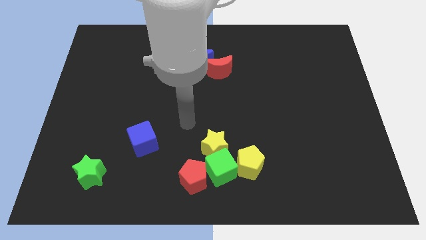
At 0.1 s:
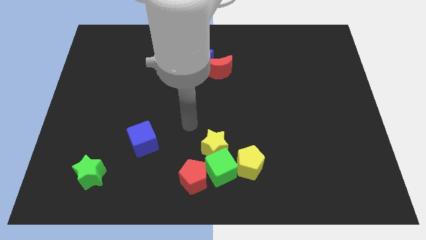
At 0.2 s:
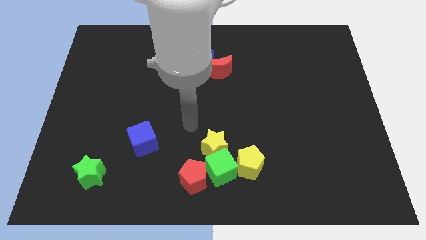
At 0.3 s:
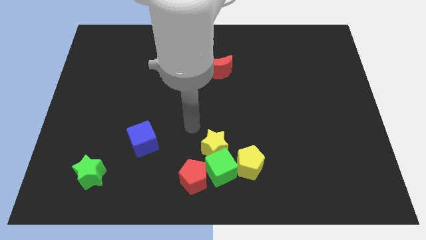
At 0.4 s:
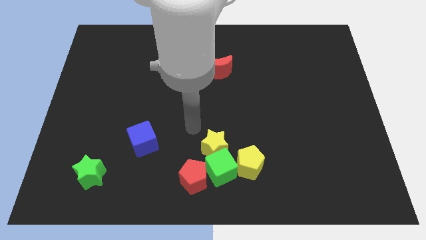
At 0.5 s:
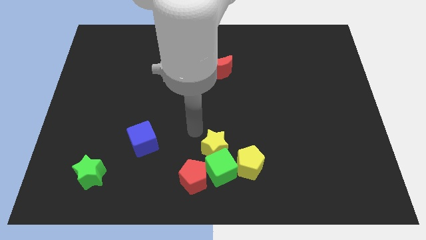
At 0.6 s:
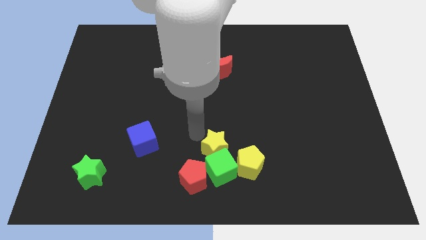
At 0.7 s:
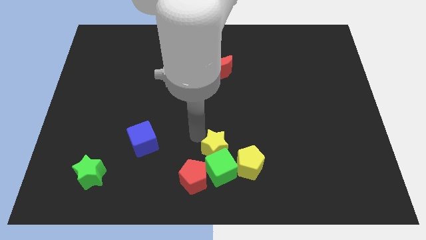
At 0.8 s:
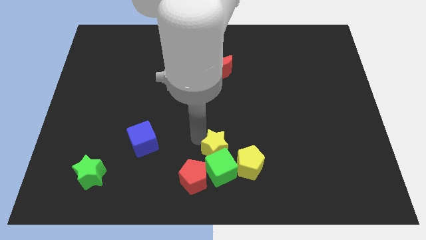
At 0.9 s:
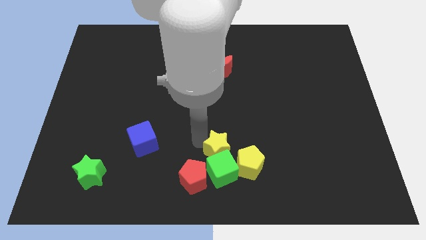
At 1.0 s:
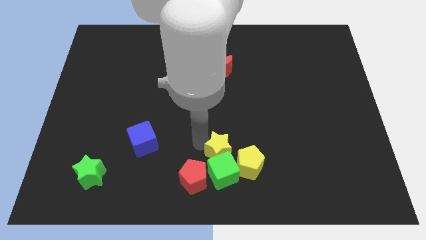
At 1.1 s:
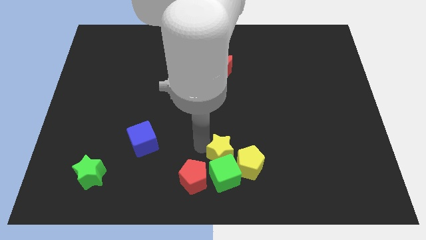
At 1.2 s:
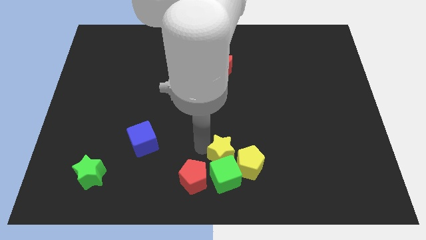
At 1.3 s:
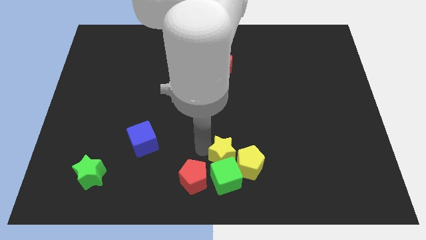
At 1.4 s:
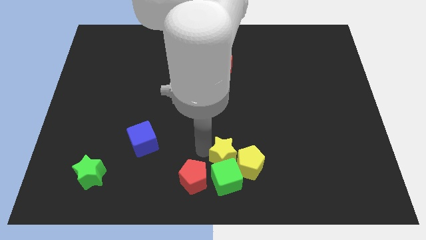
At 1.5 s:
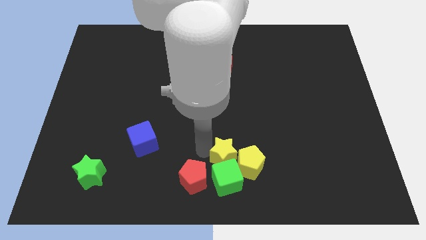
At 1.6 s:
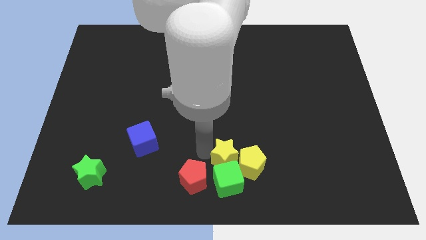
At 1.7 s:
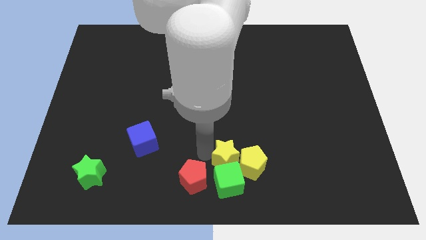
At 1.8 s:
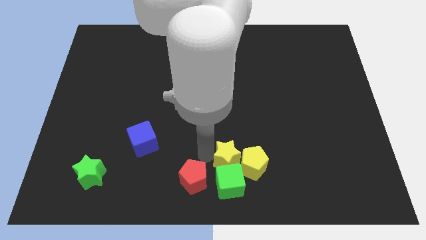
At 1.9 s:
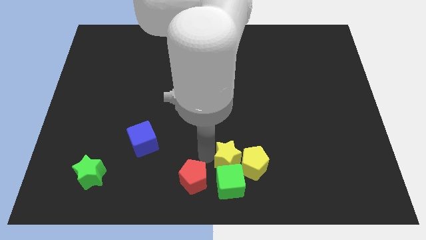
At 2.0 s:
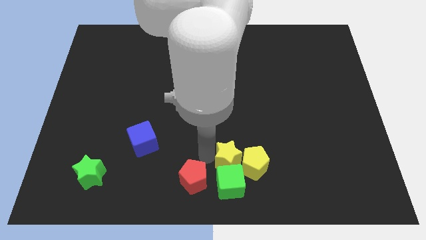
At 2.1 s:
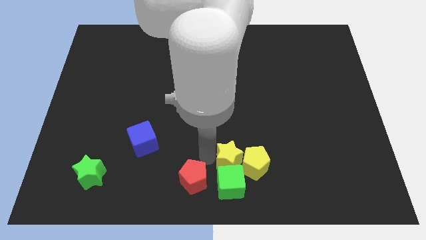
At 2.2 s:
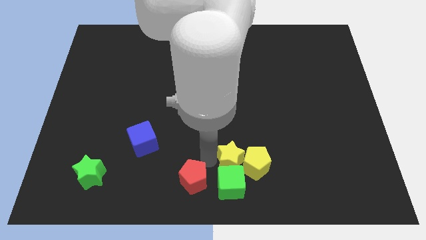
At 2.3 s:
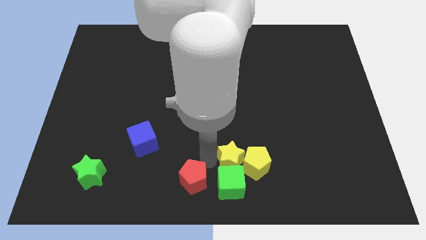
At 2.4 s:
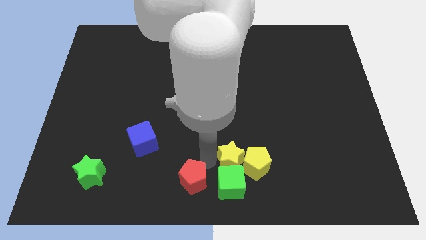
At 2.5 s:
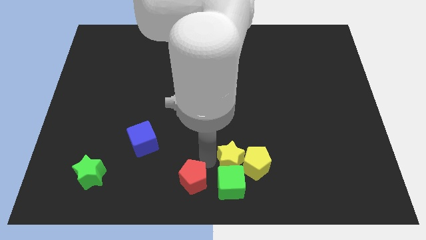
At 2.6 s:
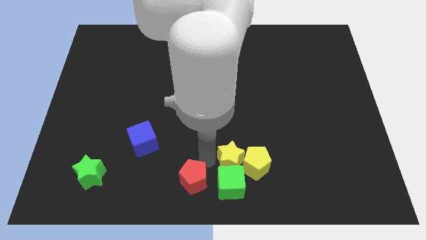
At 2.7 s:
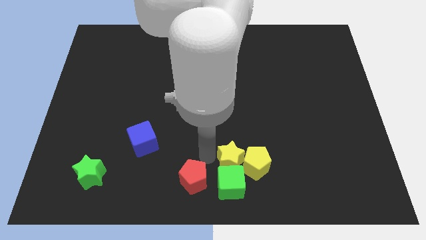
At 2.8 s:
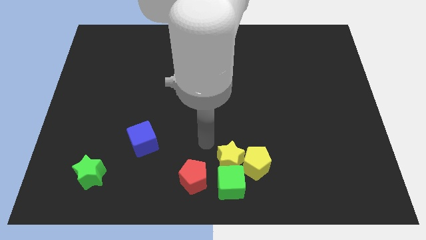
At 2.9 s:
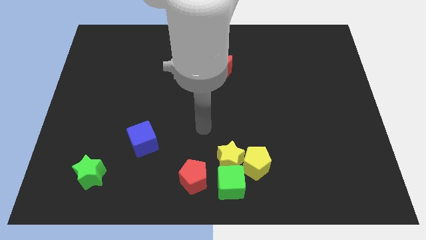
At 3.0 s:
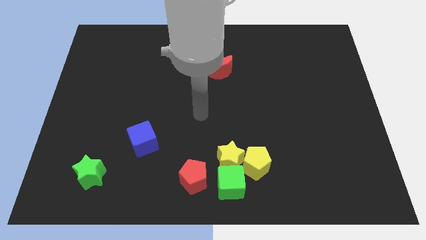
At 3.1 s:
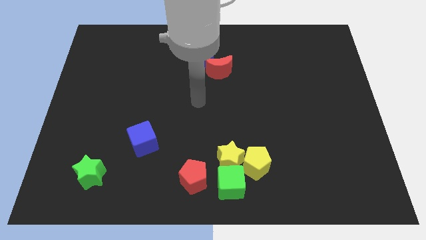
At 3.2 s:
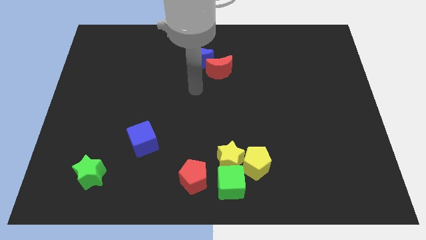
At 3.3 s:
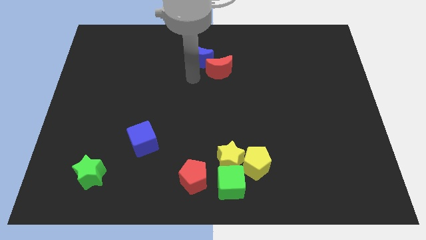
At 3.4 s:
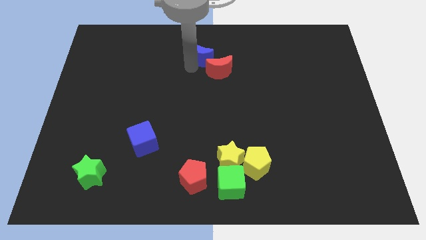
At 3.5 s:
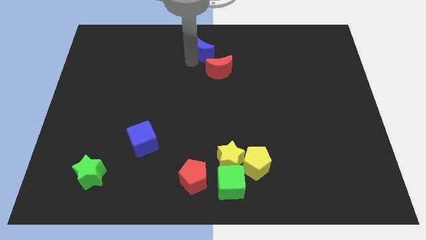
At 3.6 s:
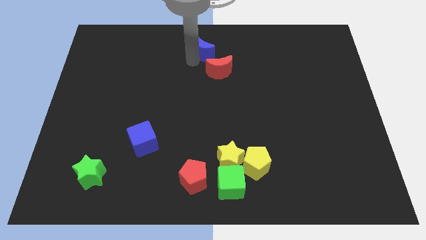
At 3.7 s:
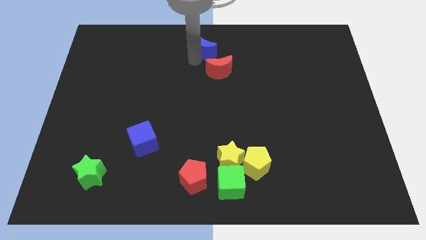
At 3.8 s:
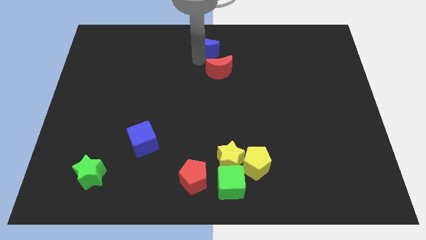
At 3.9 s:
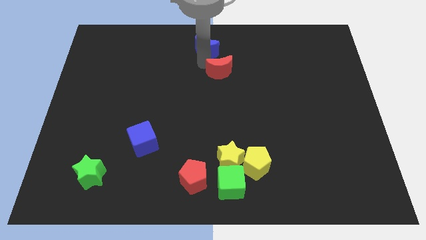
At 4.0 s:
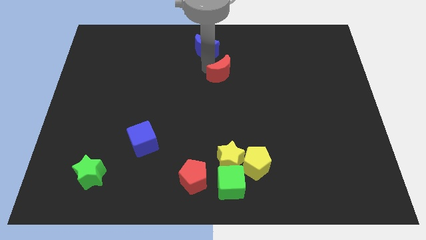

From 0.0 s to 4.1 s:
push a group of blocks downward

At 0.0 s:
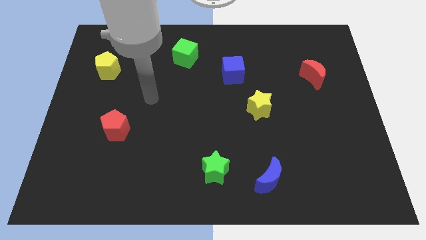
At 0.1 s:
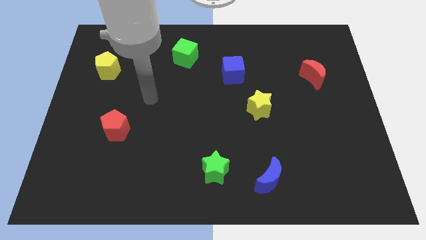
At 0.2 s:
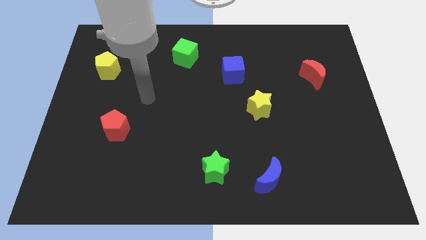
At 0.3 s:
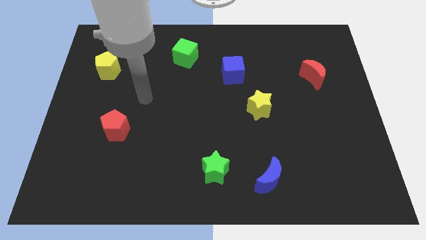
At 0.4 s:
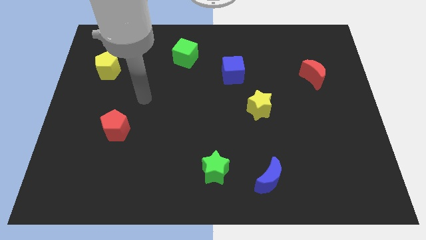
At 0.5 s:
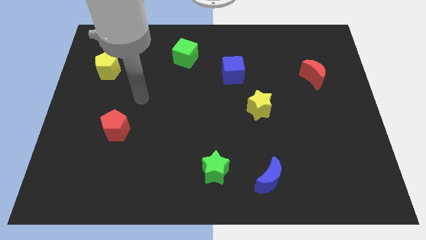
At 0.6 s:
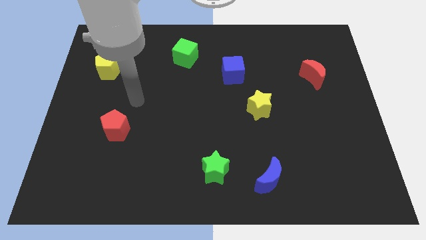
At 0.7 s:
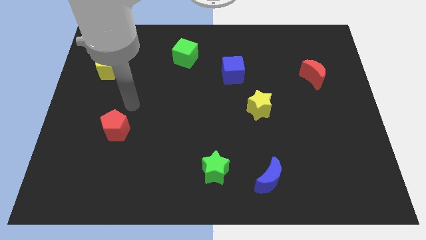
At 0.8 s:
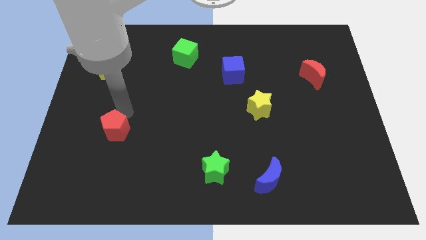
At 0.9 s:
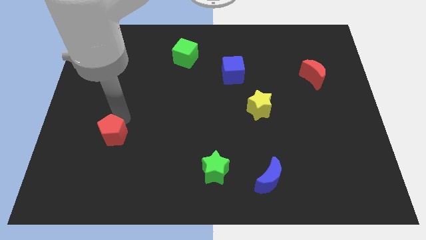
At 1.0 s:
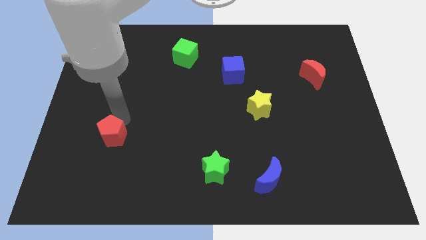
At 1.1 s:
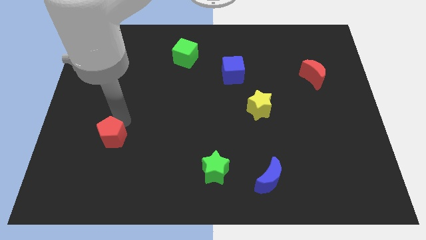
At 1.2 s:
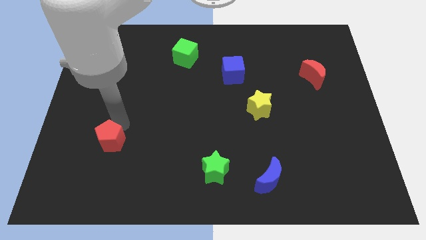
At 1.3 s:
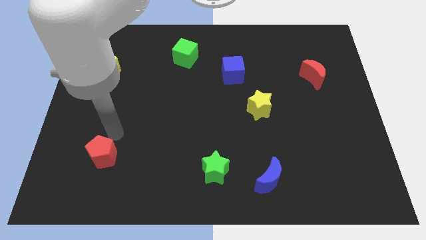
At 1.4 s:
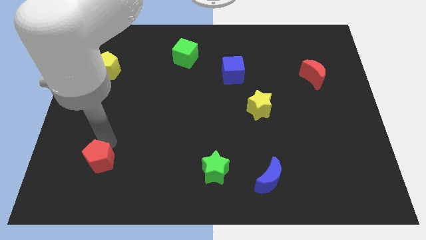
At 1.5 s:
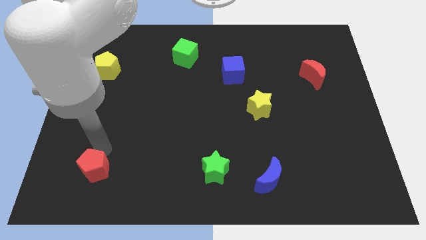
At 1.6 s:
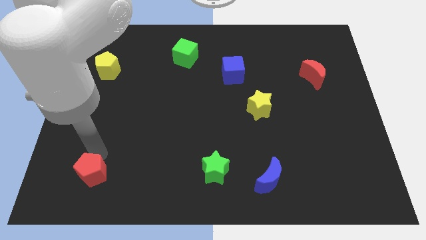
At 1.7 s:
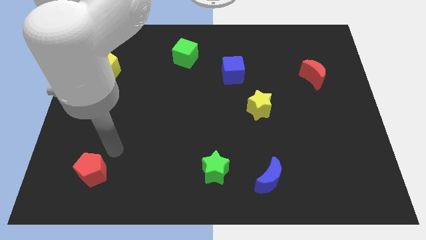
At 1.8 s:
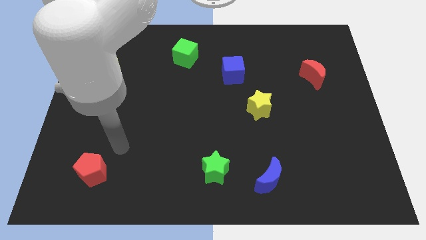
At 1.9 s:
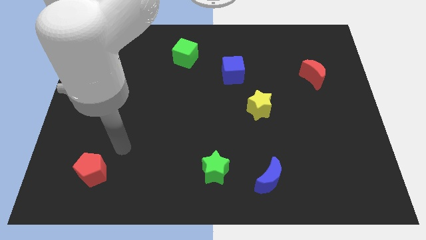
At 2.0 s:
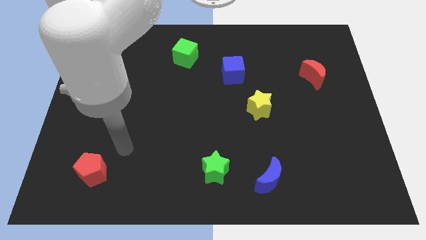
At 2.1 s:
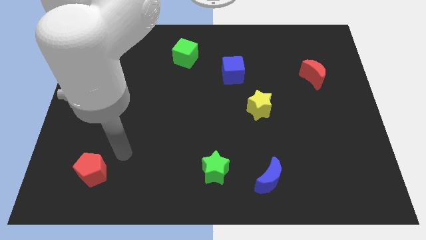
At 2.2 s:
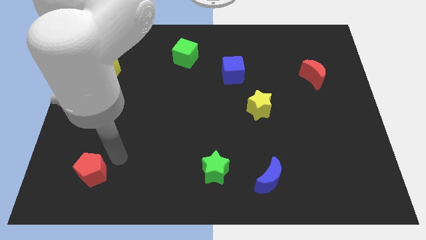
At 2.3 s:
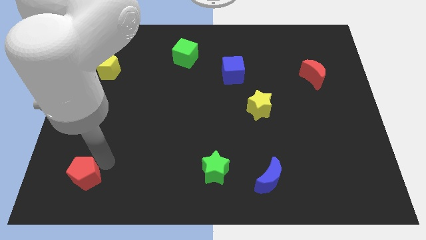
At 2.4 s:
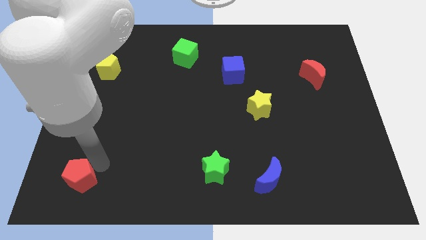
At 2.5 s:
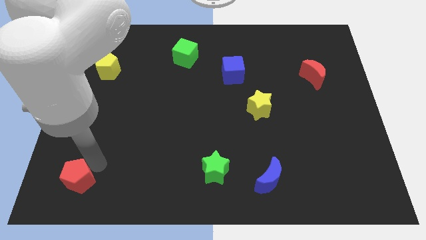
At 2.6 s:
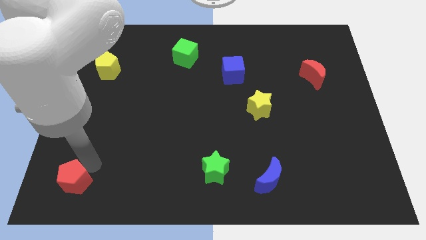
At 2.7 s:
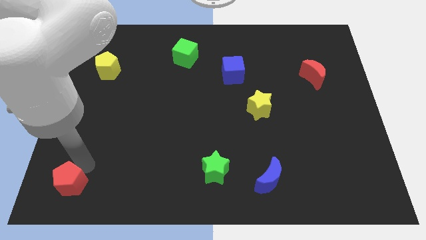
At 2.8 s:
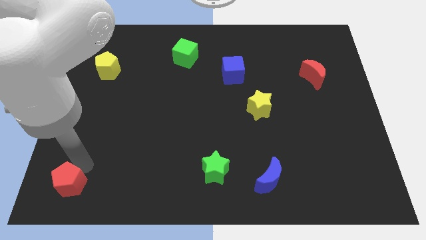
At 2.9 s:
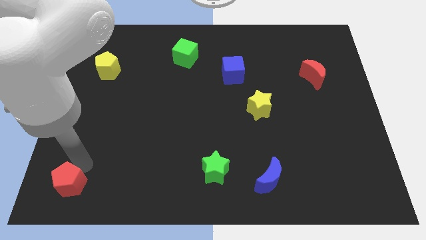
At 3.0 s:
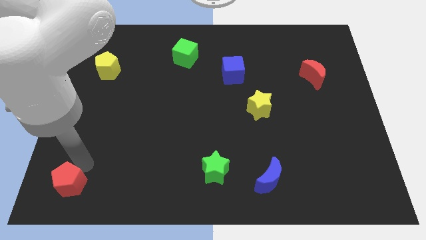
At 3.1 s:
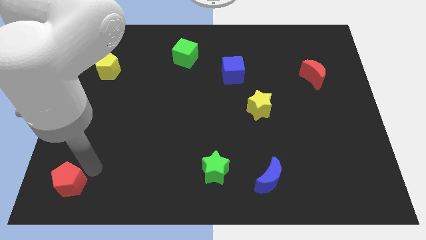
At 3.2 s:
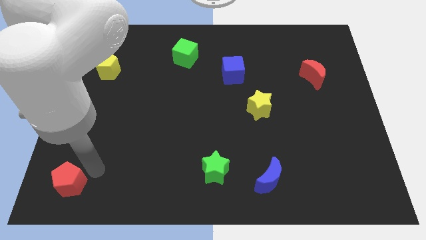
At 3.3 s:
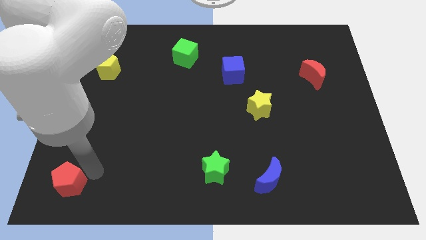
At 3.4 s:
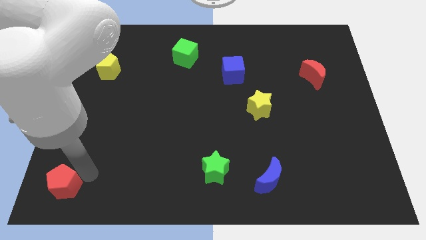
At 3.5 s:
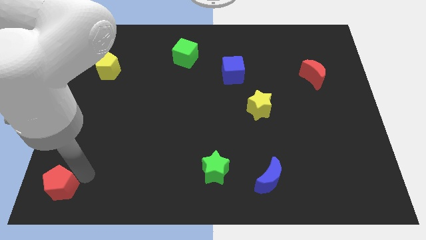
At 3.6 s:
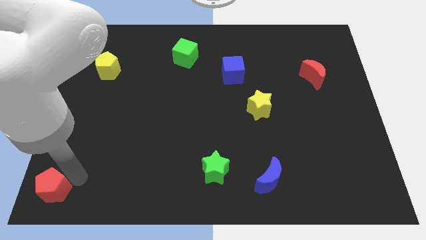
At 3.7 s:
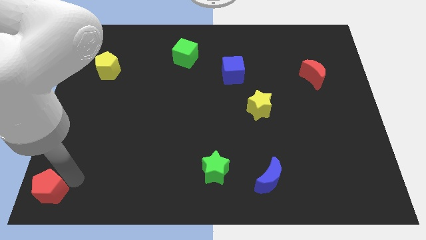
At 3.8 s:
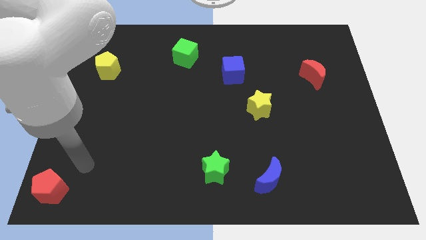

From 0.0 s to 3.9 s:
push red pentagon towards bottom left corner of the board

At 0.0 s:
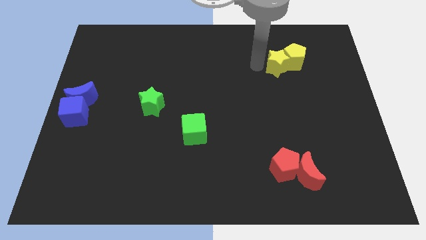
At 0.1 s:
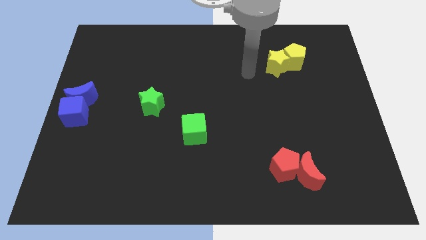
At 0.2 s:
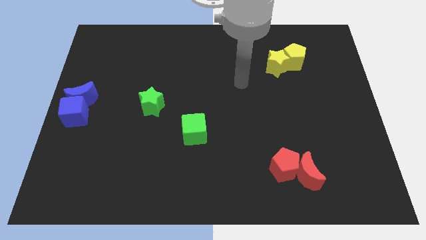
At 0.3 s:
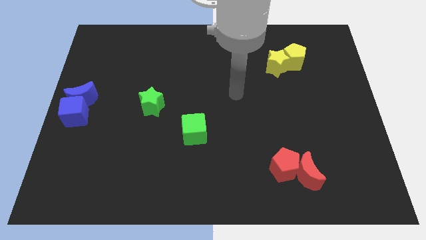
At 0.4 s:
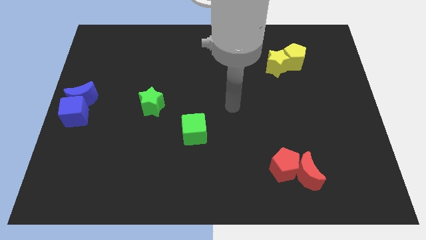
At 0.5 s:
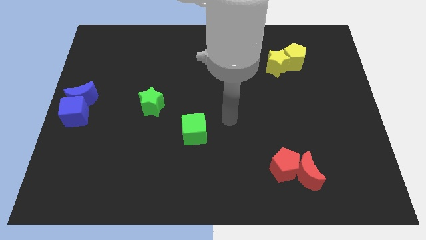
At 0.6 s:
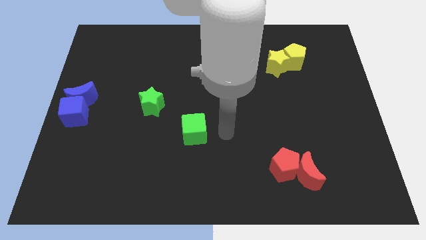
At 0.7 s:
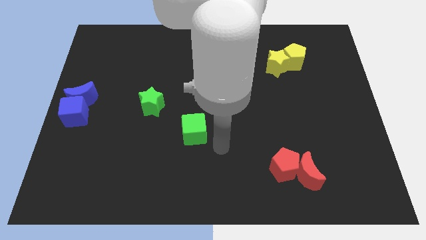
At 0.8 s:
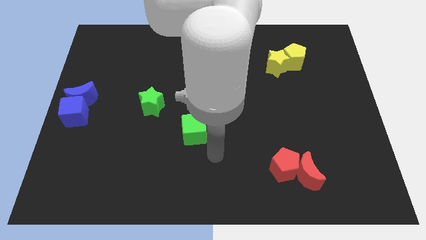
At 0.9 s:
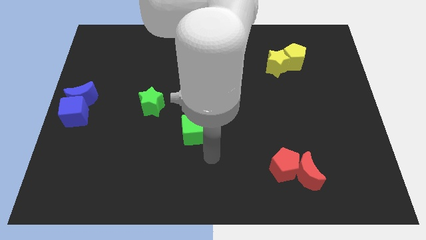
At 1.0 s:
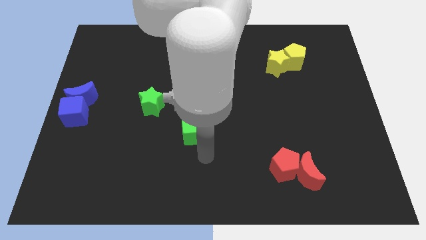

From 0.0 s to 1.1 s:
move your arm below the green cube
